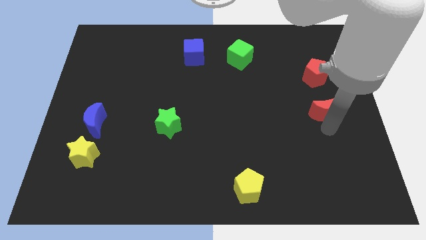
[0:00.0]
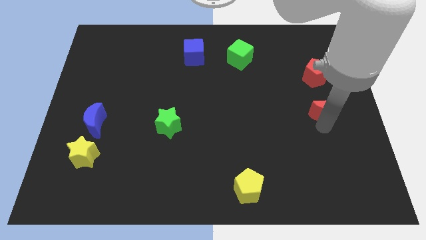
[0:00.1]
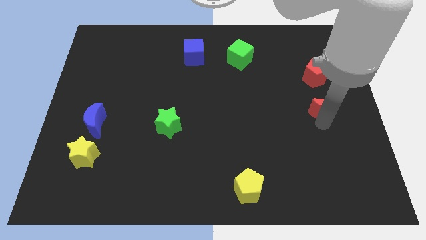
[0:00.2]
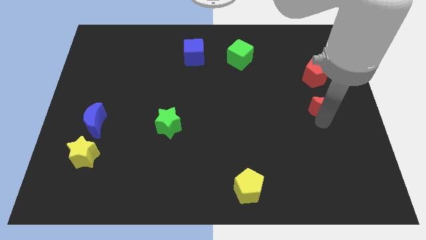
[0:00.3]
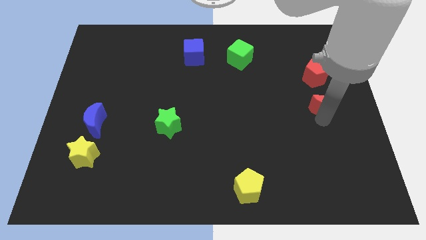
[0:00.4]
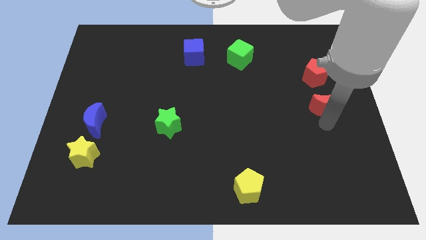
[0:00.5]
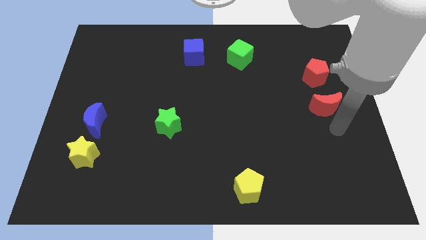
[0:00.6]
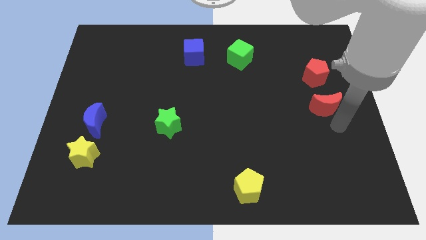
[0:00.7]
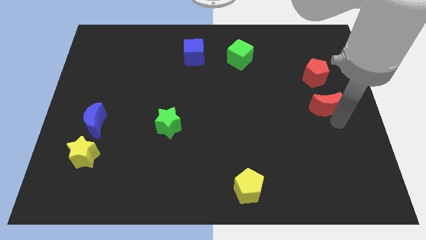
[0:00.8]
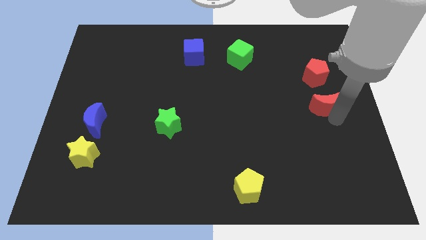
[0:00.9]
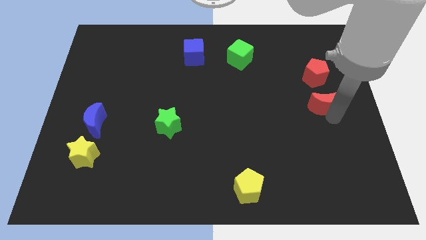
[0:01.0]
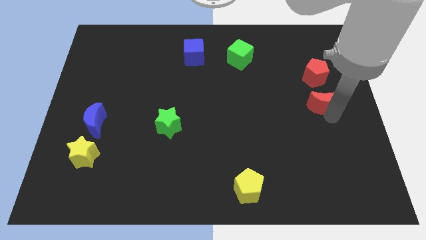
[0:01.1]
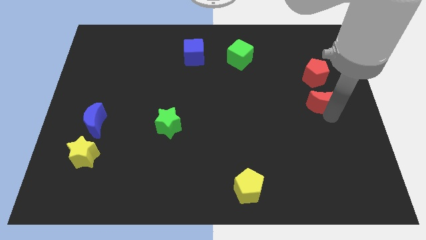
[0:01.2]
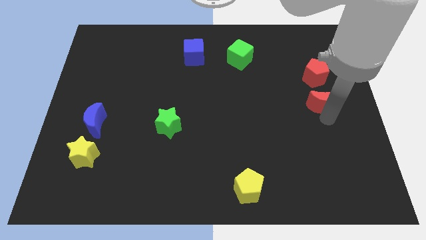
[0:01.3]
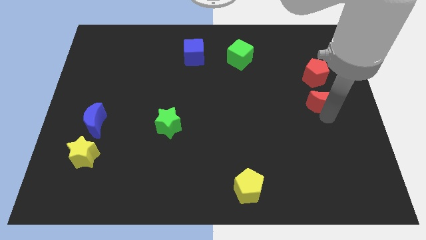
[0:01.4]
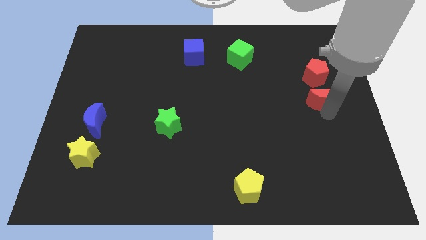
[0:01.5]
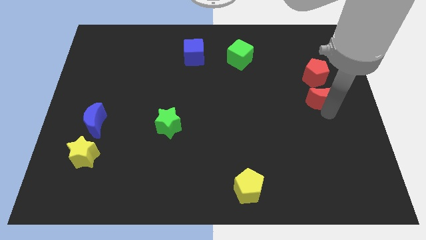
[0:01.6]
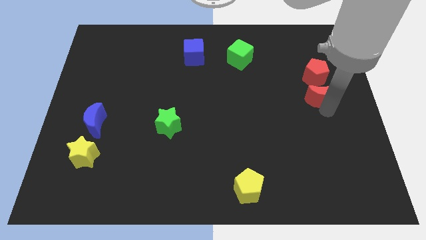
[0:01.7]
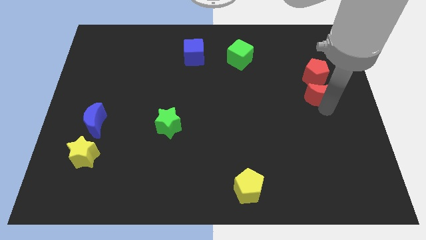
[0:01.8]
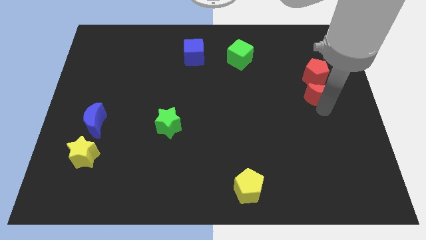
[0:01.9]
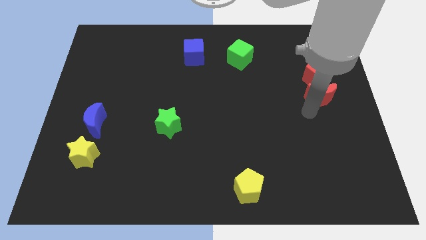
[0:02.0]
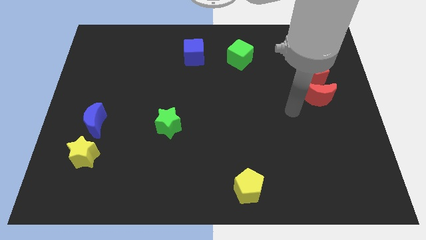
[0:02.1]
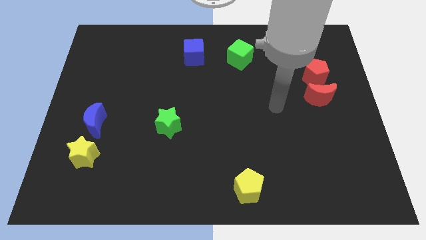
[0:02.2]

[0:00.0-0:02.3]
move the red crescent close to the bottom of the red pentagon

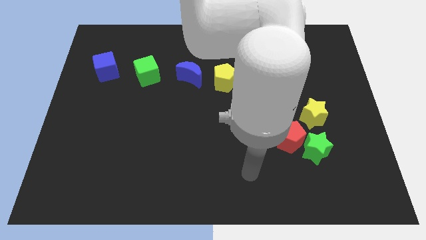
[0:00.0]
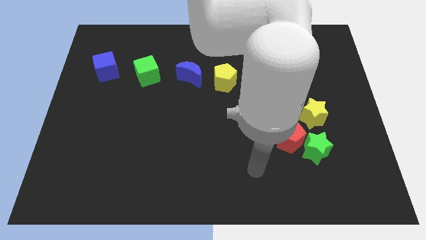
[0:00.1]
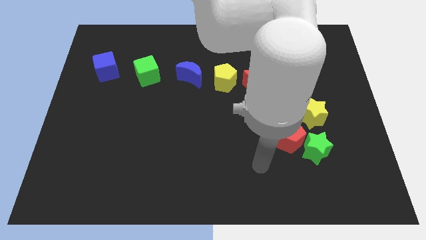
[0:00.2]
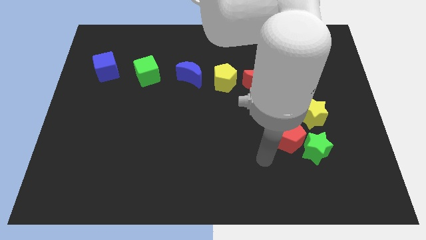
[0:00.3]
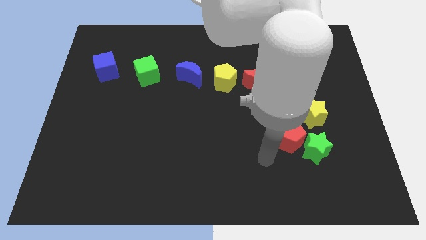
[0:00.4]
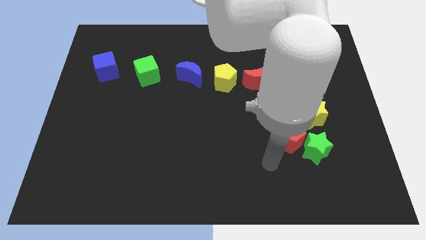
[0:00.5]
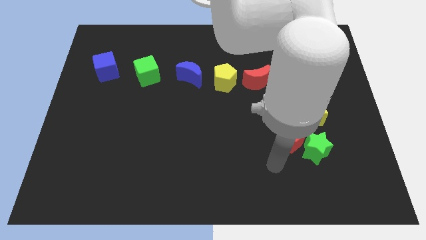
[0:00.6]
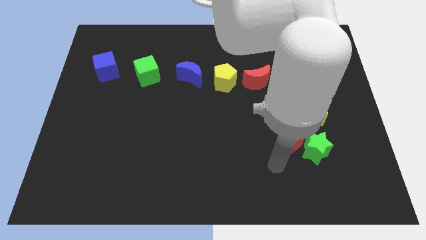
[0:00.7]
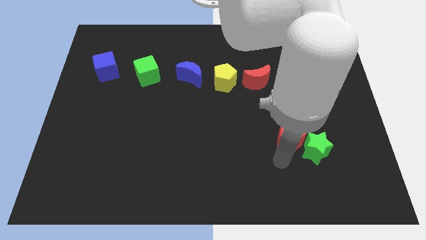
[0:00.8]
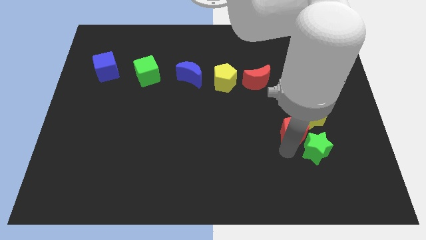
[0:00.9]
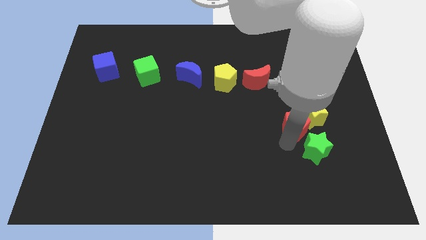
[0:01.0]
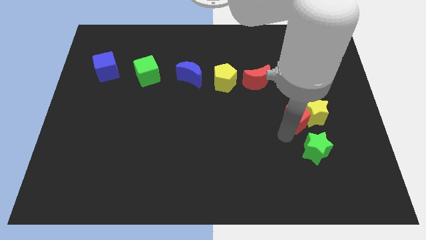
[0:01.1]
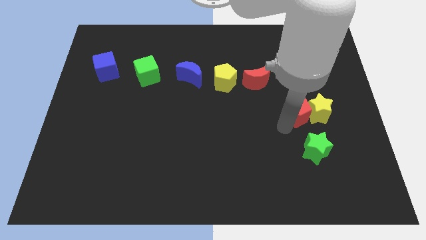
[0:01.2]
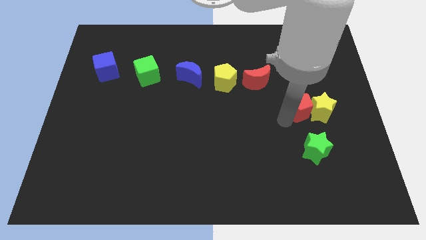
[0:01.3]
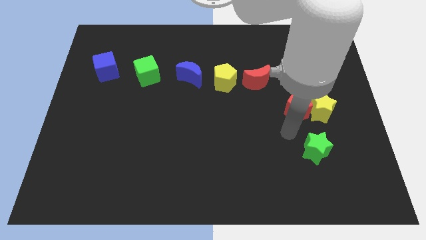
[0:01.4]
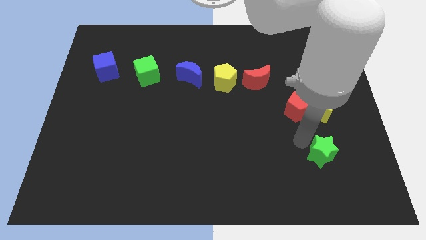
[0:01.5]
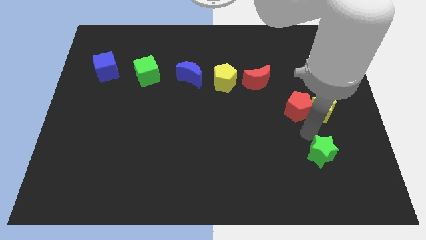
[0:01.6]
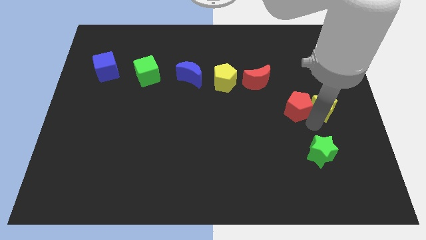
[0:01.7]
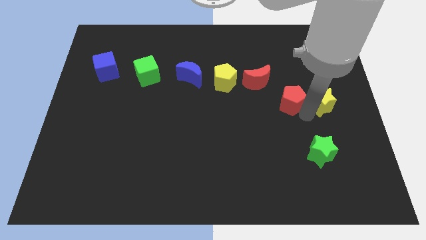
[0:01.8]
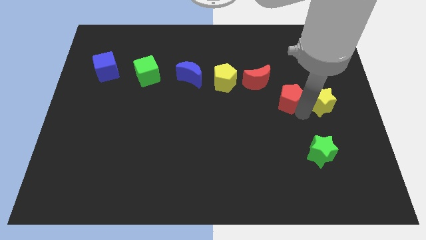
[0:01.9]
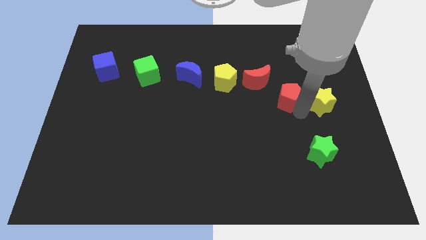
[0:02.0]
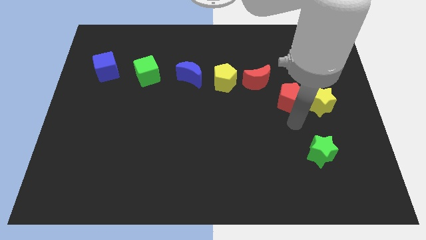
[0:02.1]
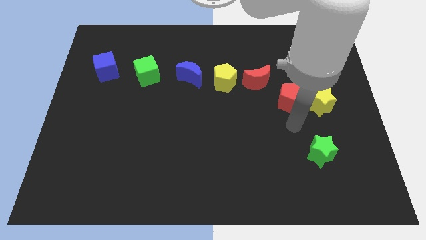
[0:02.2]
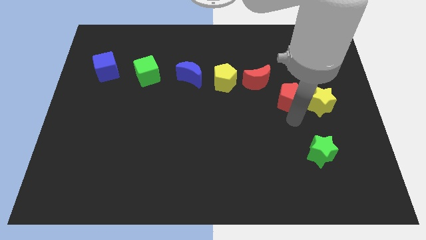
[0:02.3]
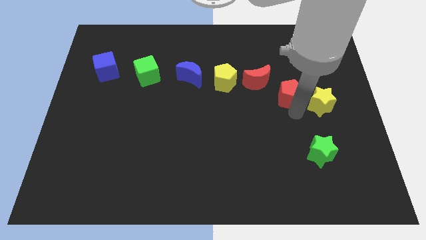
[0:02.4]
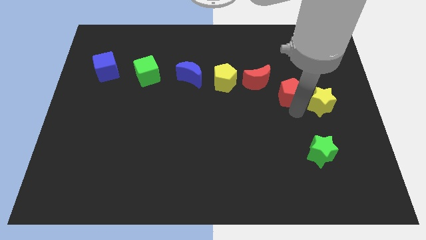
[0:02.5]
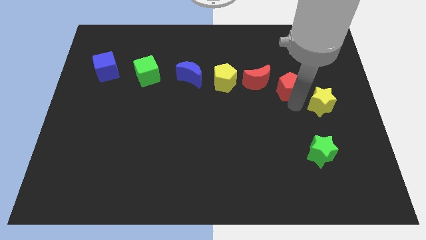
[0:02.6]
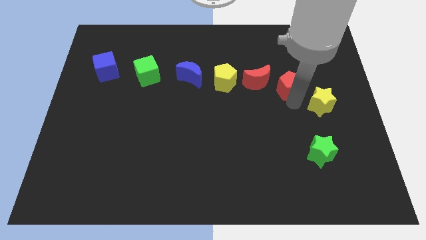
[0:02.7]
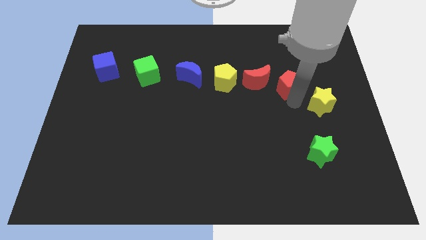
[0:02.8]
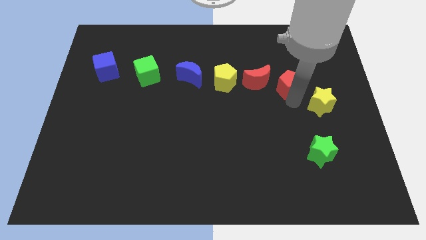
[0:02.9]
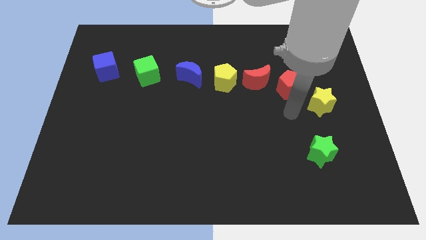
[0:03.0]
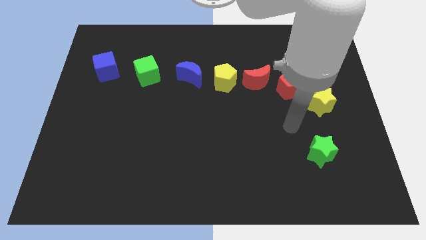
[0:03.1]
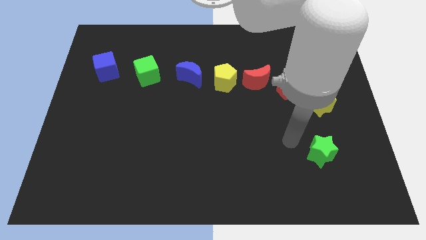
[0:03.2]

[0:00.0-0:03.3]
place red pentagon to the right of red crescent

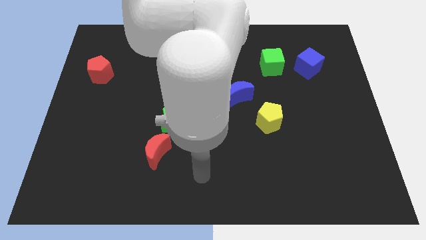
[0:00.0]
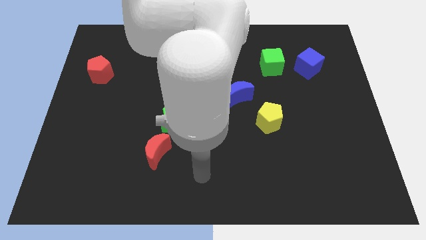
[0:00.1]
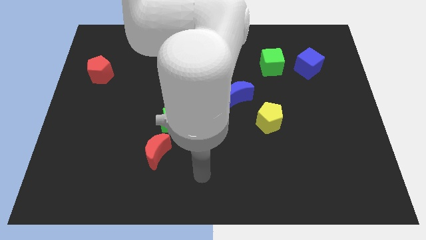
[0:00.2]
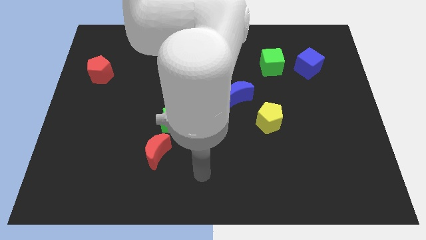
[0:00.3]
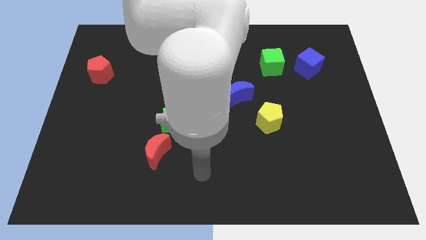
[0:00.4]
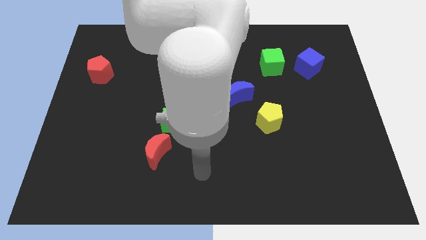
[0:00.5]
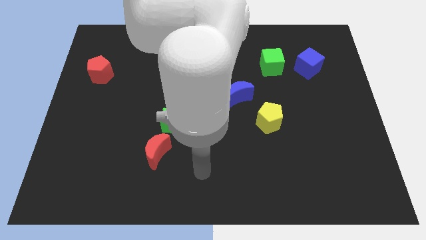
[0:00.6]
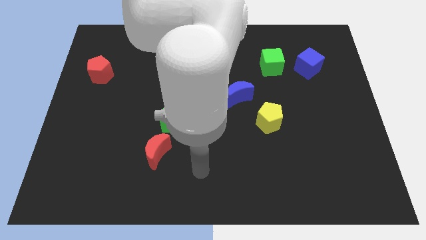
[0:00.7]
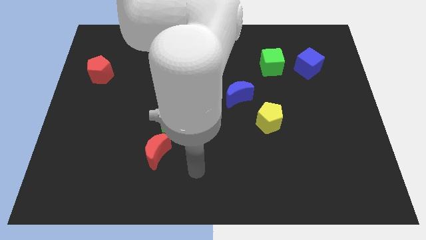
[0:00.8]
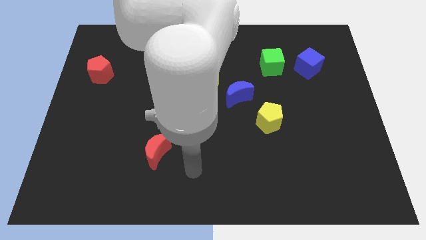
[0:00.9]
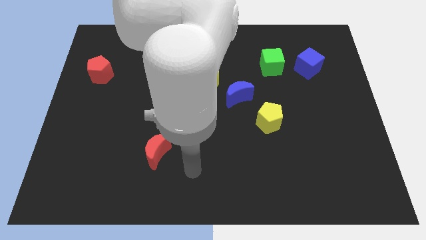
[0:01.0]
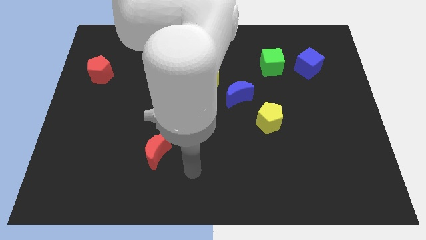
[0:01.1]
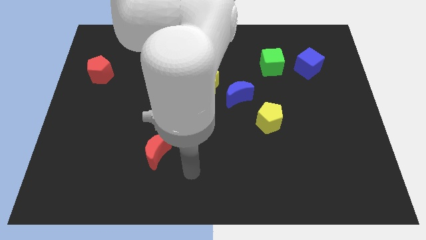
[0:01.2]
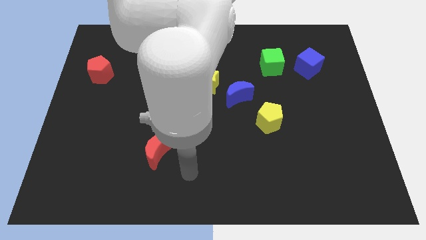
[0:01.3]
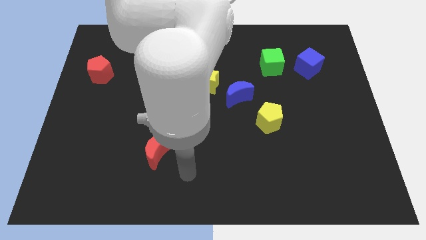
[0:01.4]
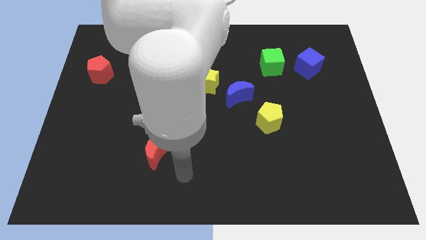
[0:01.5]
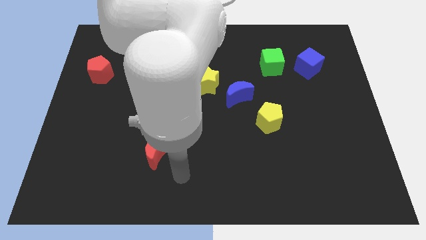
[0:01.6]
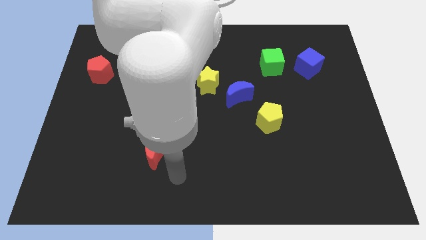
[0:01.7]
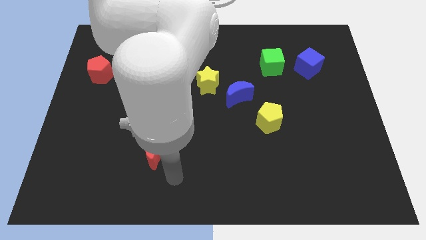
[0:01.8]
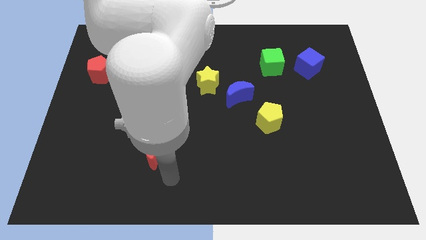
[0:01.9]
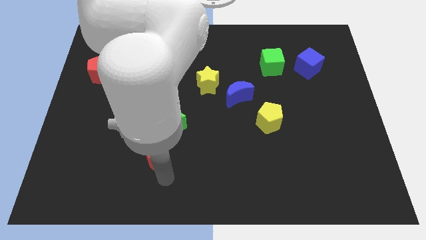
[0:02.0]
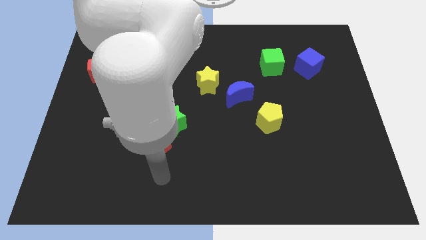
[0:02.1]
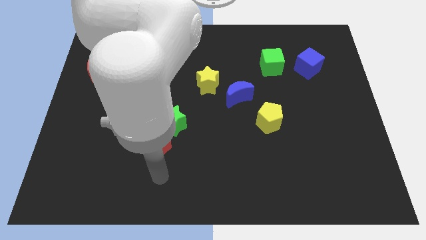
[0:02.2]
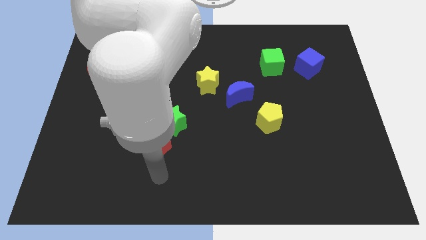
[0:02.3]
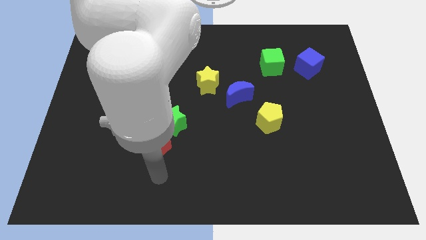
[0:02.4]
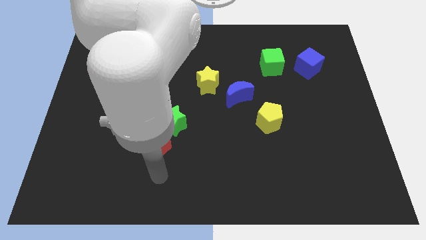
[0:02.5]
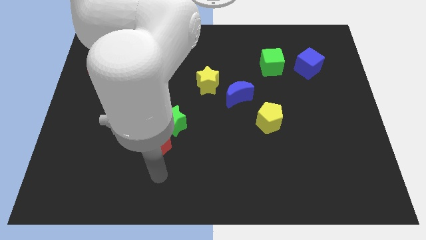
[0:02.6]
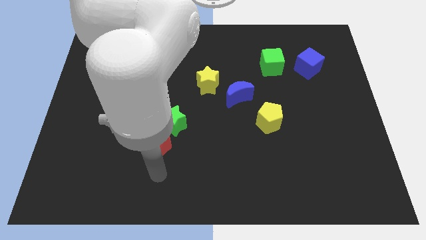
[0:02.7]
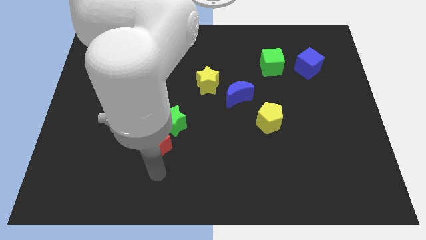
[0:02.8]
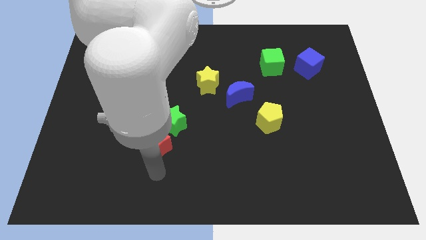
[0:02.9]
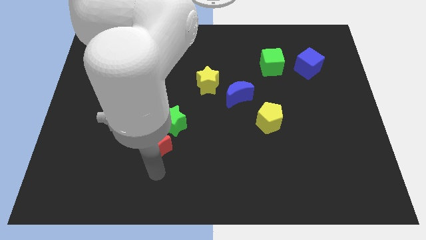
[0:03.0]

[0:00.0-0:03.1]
tap the bottom side of the red moon

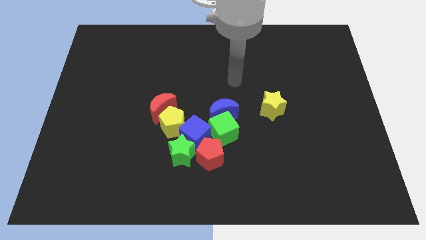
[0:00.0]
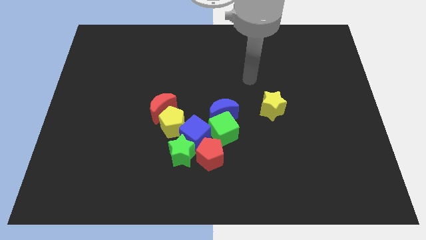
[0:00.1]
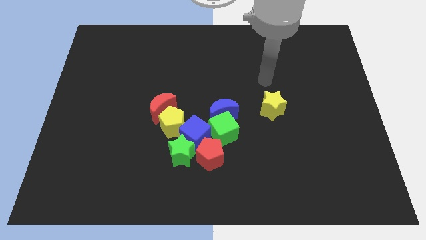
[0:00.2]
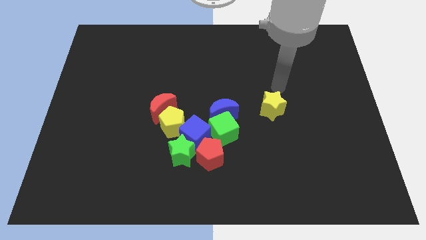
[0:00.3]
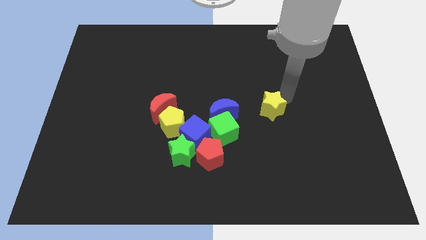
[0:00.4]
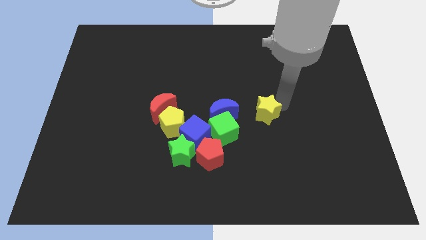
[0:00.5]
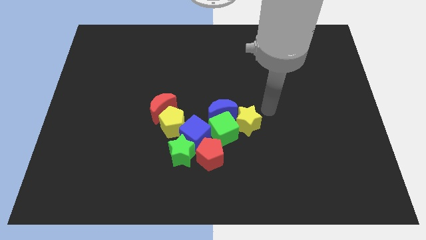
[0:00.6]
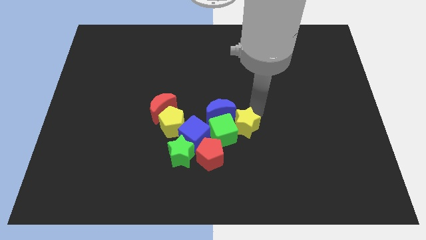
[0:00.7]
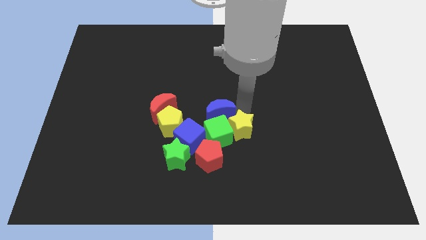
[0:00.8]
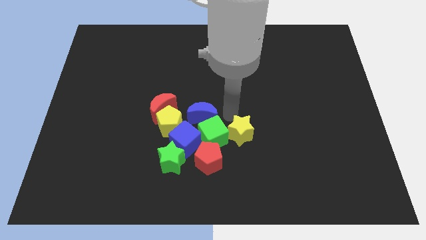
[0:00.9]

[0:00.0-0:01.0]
push the yellow star into the group of blocks
